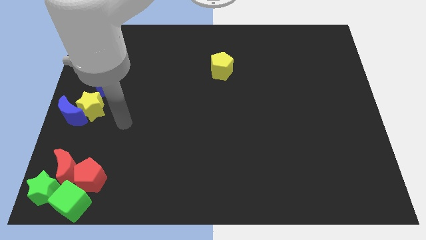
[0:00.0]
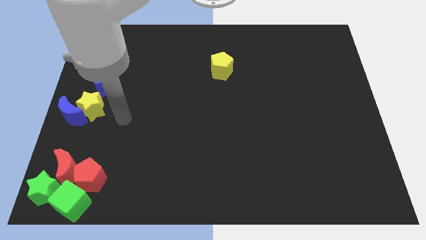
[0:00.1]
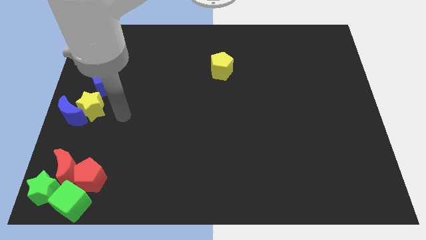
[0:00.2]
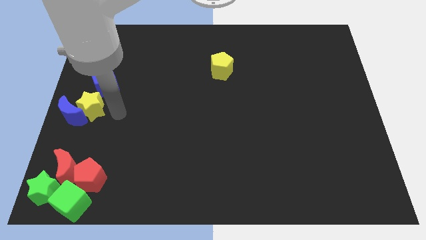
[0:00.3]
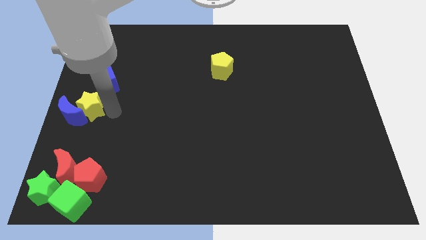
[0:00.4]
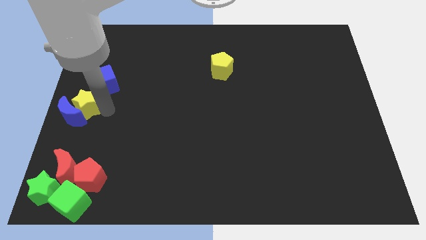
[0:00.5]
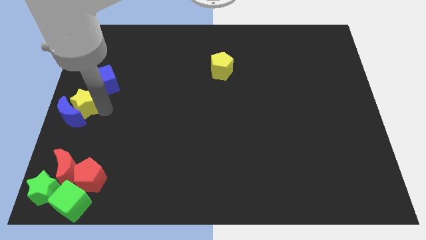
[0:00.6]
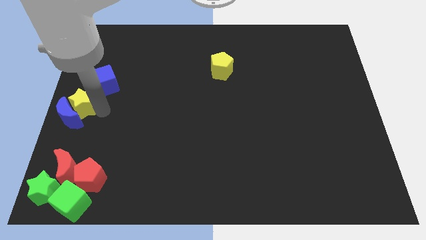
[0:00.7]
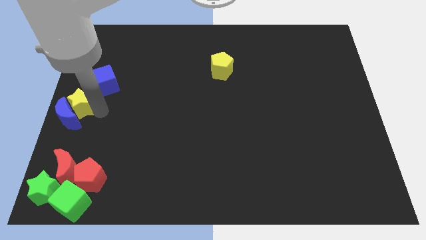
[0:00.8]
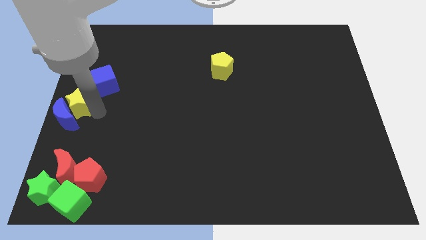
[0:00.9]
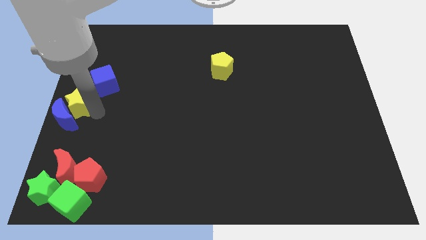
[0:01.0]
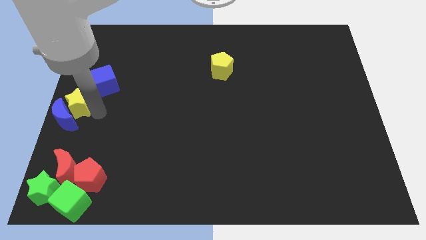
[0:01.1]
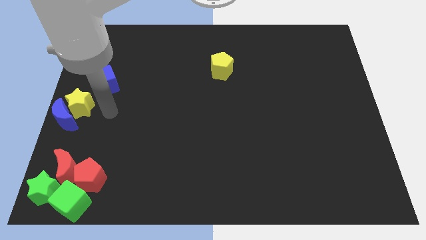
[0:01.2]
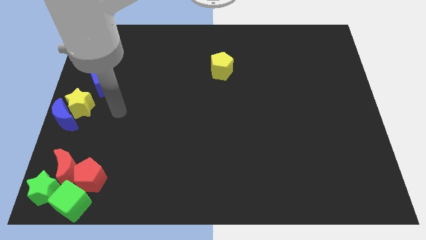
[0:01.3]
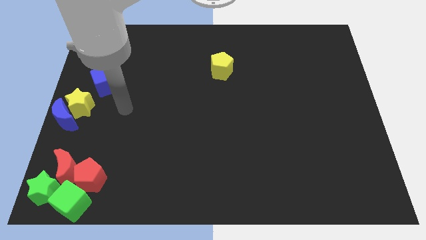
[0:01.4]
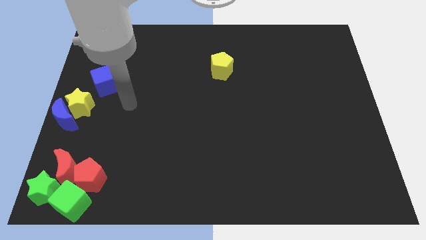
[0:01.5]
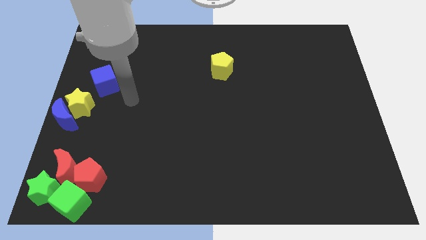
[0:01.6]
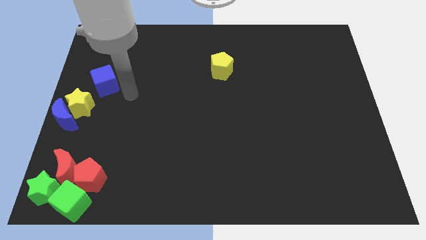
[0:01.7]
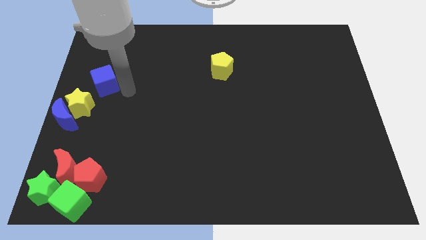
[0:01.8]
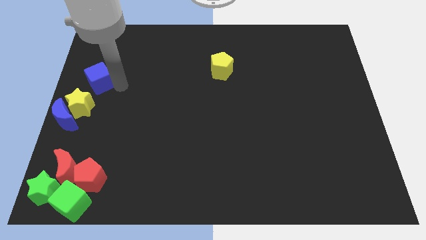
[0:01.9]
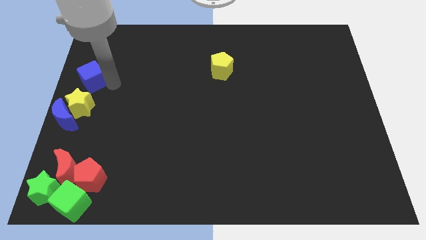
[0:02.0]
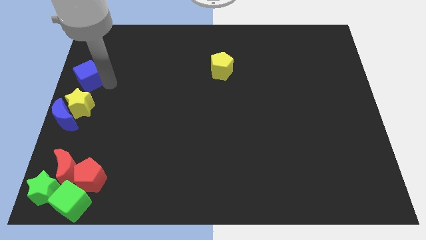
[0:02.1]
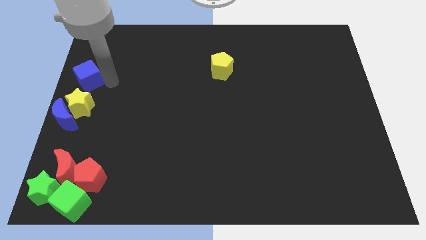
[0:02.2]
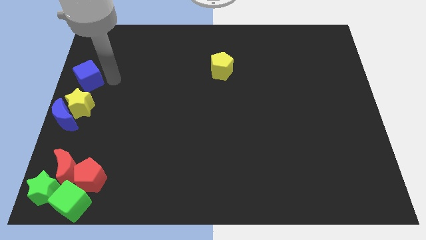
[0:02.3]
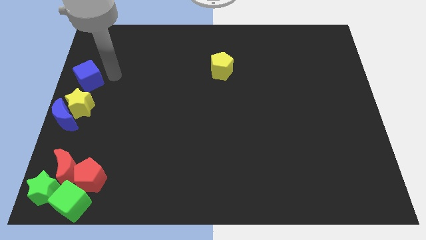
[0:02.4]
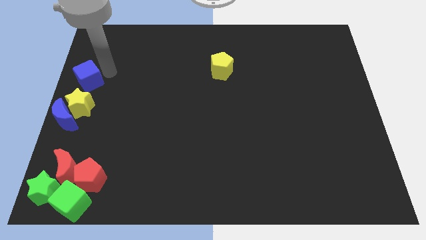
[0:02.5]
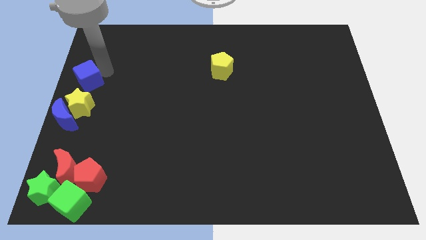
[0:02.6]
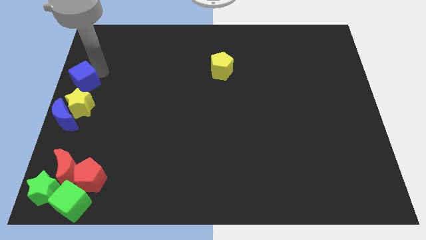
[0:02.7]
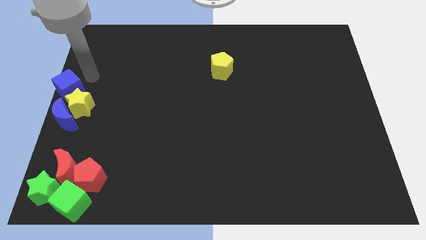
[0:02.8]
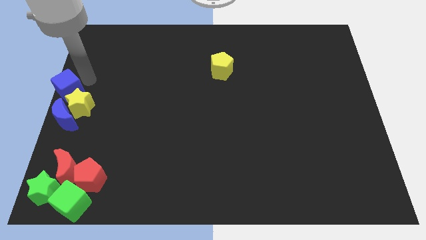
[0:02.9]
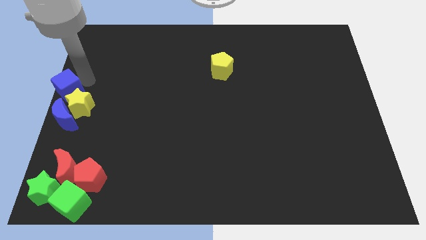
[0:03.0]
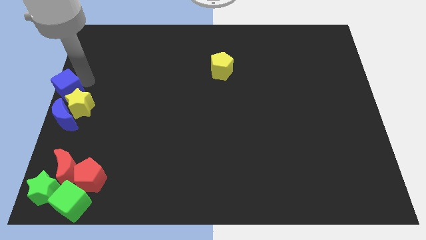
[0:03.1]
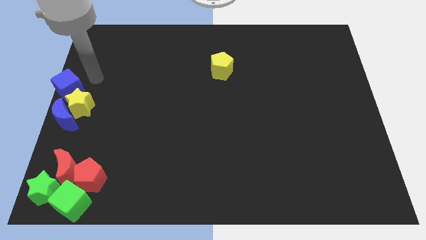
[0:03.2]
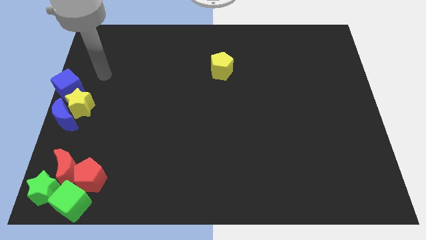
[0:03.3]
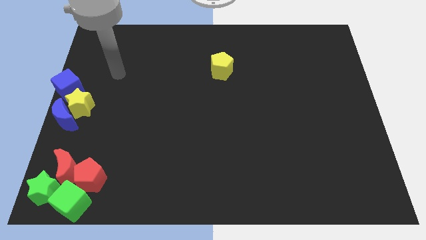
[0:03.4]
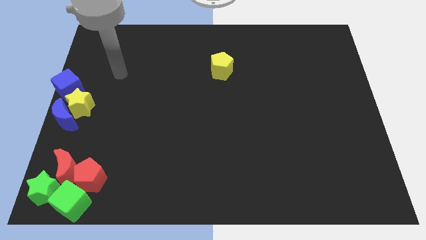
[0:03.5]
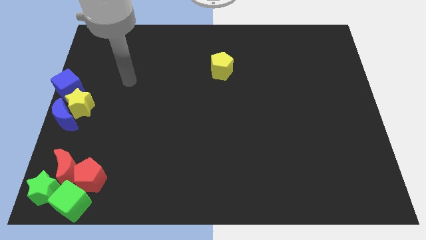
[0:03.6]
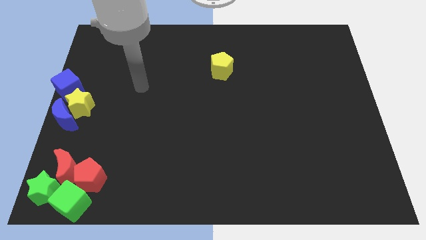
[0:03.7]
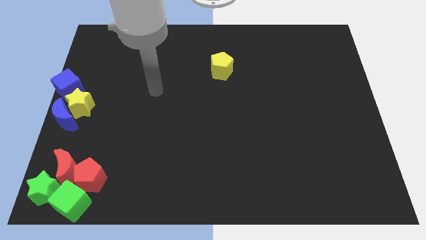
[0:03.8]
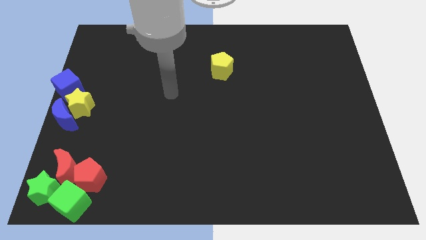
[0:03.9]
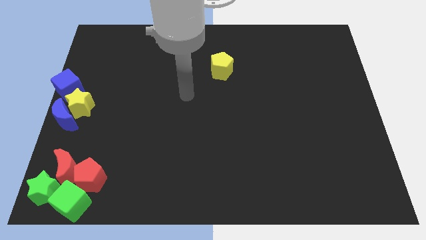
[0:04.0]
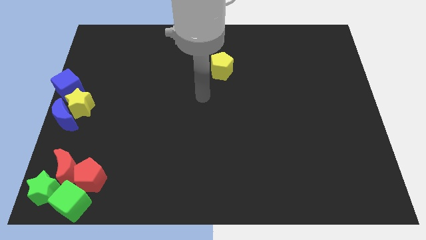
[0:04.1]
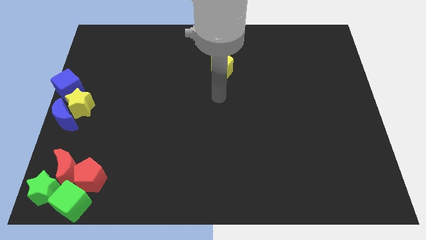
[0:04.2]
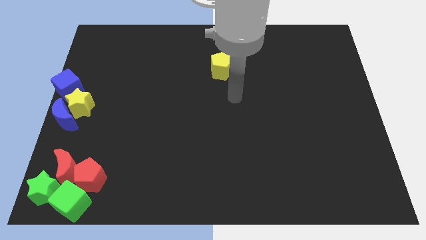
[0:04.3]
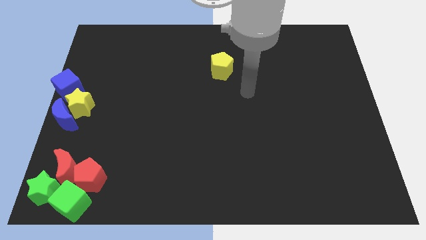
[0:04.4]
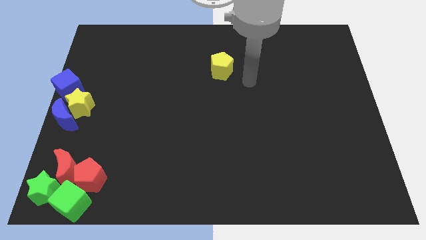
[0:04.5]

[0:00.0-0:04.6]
push both the blue blocks and yellow star to the center left side of the board

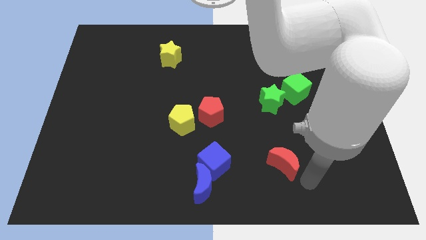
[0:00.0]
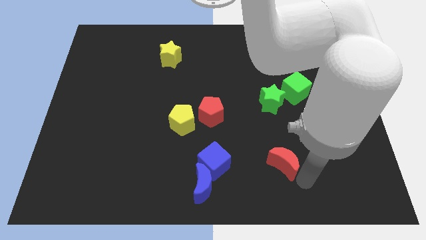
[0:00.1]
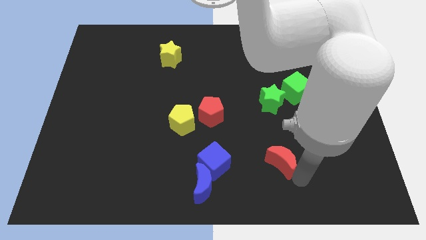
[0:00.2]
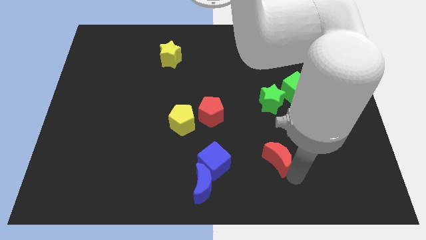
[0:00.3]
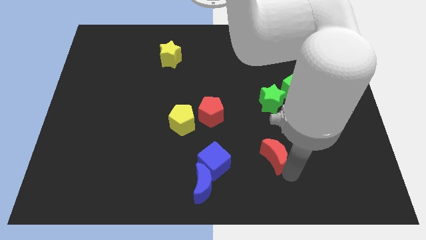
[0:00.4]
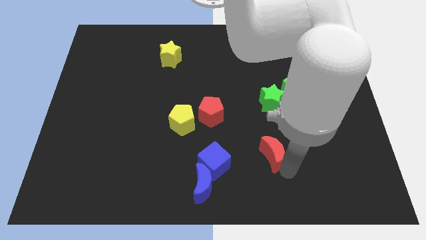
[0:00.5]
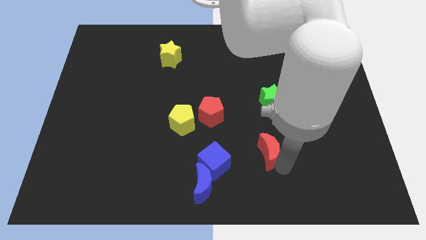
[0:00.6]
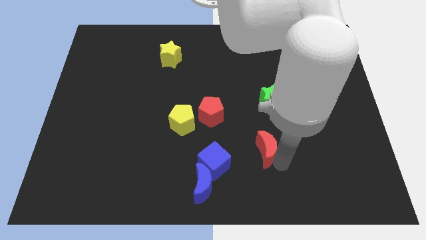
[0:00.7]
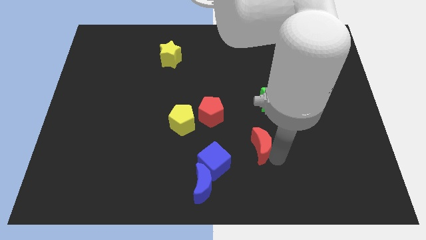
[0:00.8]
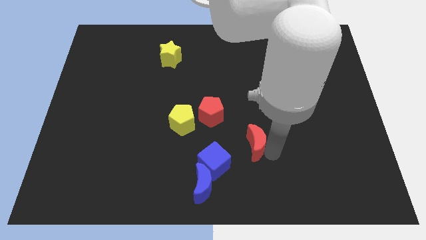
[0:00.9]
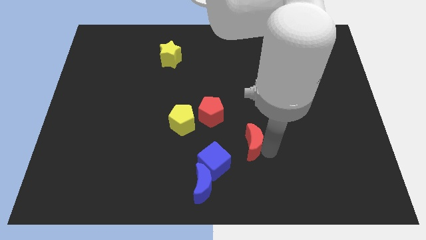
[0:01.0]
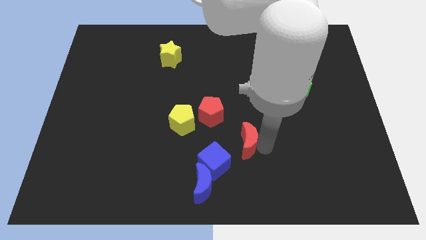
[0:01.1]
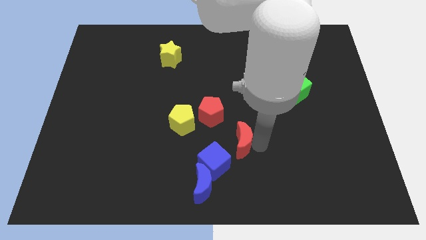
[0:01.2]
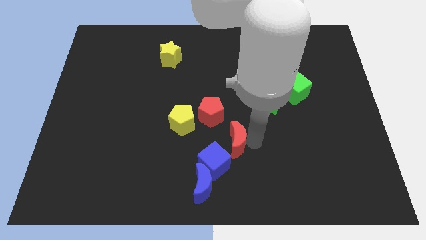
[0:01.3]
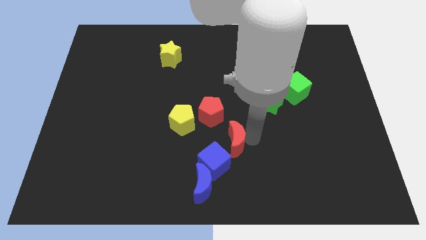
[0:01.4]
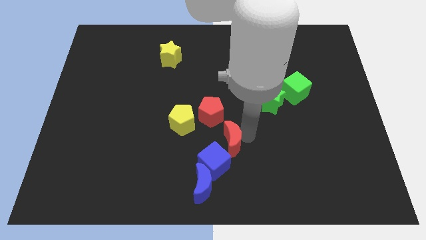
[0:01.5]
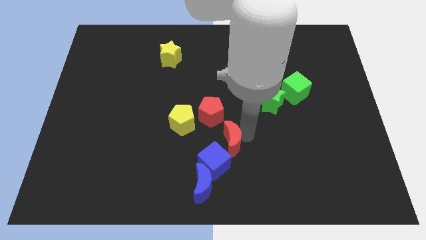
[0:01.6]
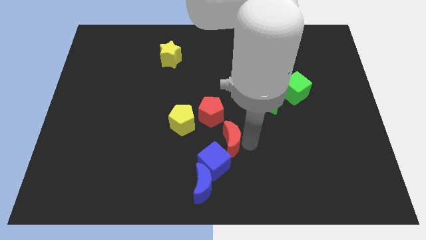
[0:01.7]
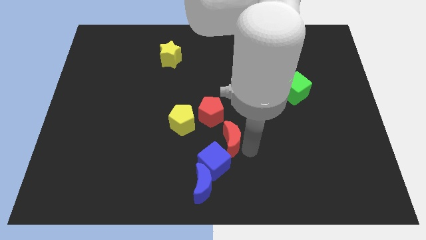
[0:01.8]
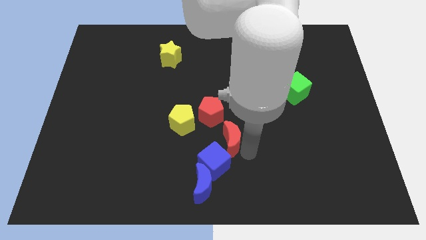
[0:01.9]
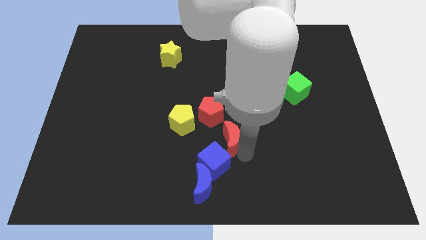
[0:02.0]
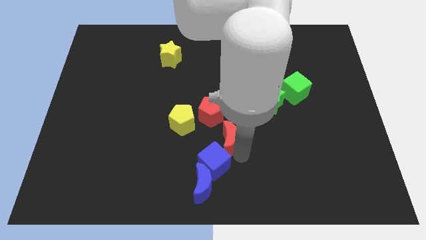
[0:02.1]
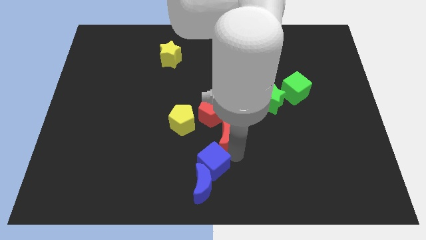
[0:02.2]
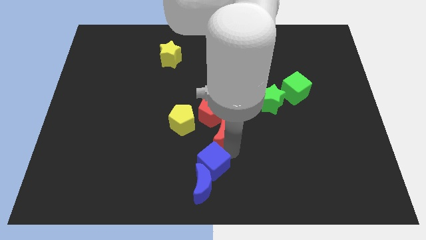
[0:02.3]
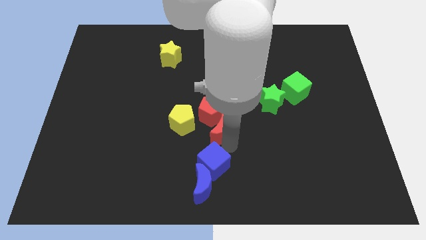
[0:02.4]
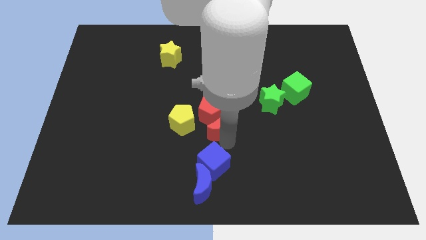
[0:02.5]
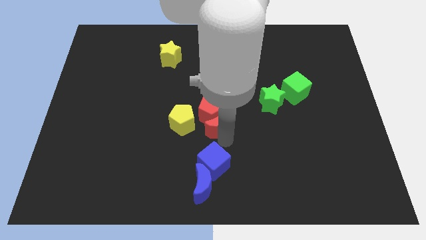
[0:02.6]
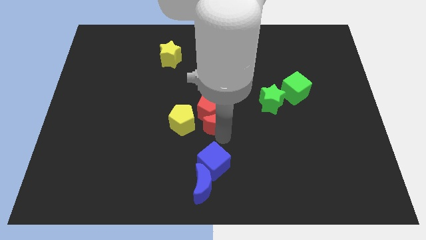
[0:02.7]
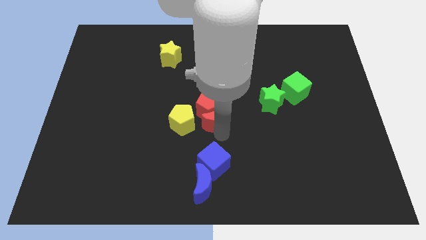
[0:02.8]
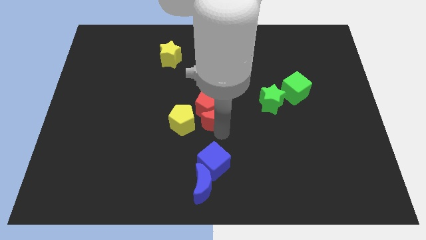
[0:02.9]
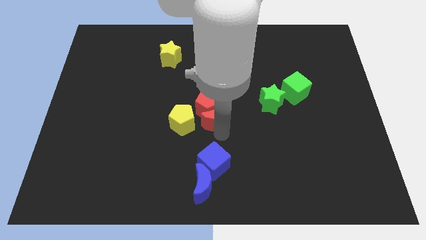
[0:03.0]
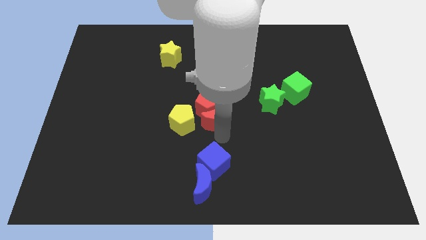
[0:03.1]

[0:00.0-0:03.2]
push the red crescent into the red pentagon
